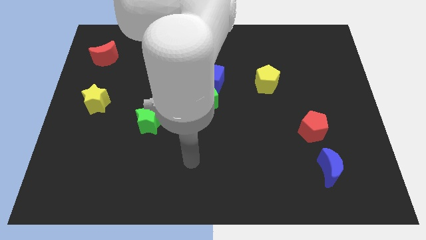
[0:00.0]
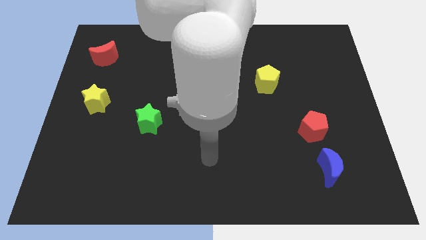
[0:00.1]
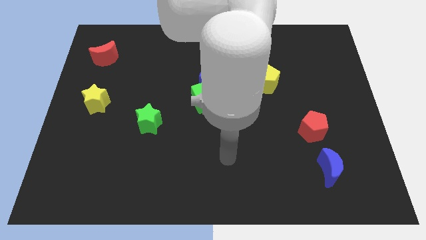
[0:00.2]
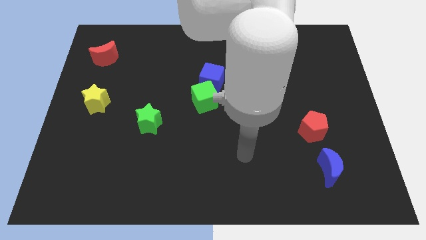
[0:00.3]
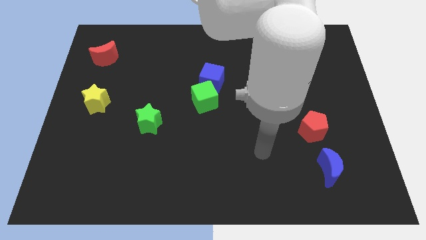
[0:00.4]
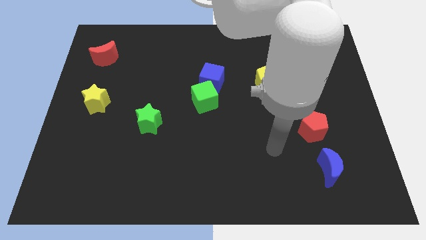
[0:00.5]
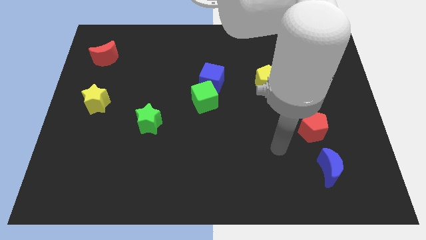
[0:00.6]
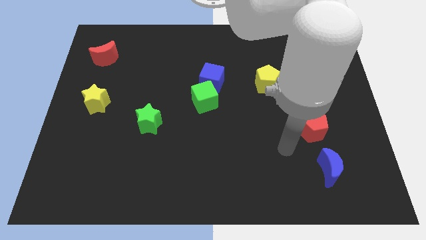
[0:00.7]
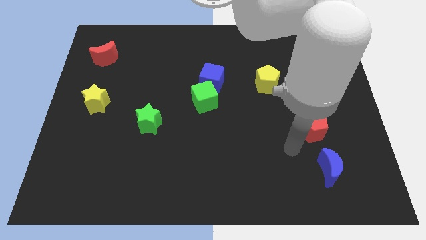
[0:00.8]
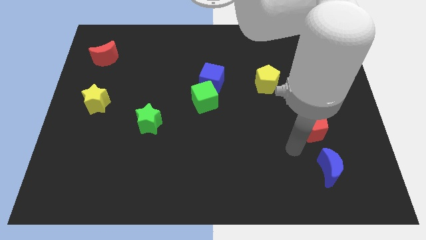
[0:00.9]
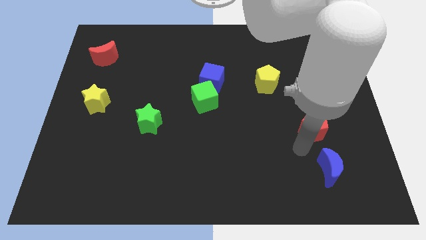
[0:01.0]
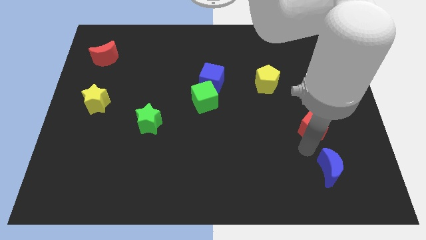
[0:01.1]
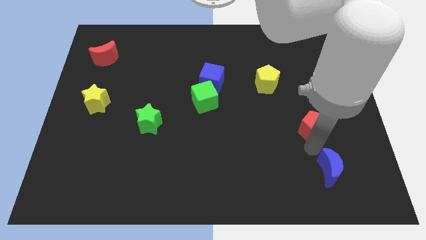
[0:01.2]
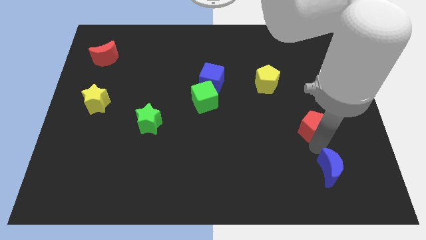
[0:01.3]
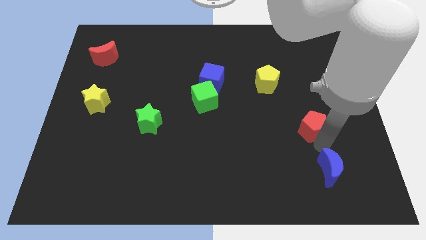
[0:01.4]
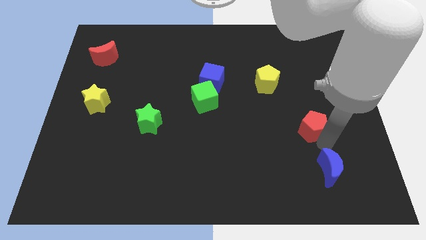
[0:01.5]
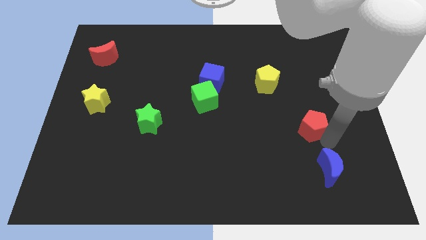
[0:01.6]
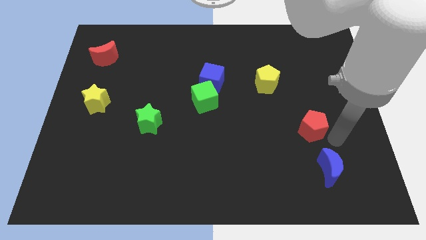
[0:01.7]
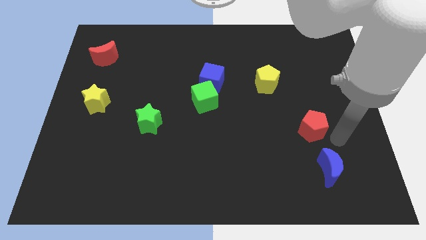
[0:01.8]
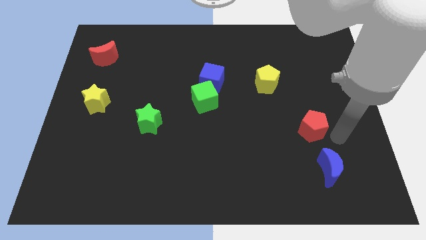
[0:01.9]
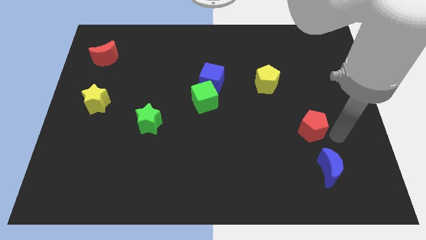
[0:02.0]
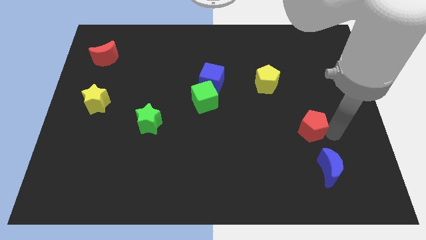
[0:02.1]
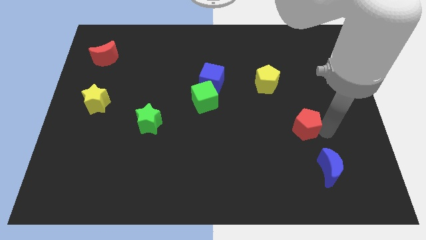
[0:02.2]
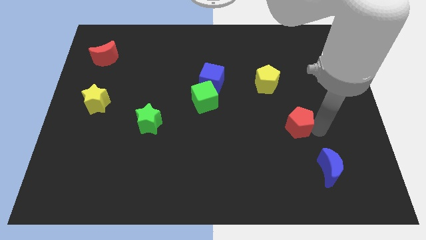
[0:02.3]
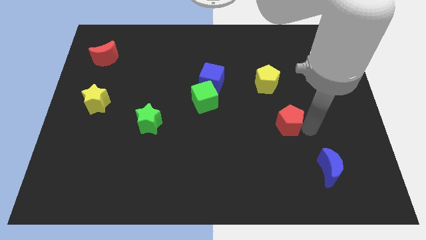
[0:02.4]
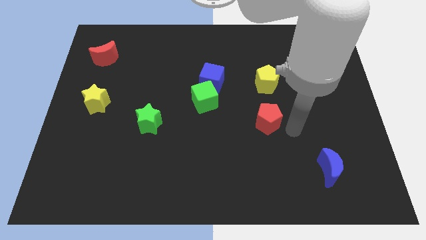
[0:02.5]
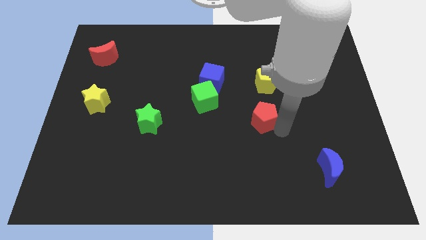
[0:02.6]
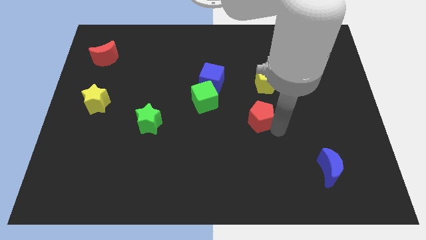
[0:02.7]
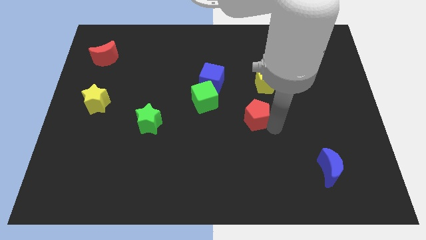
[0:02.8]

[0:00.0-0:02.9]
place the red pentagon below the yellow pentagon

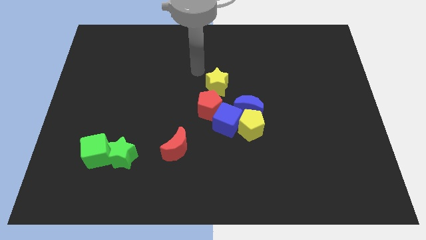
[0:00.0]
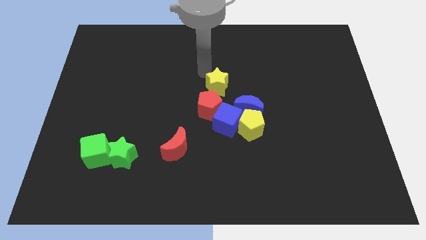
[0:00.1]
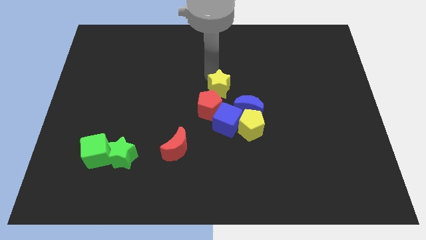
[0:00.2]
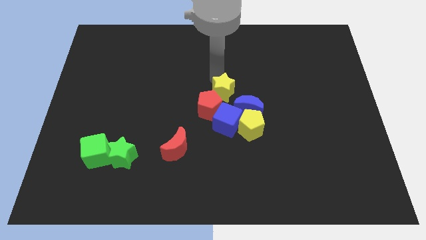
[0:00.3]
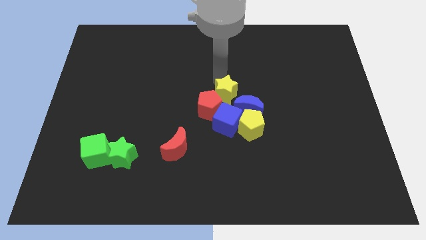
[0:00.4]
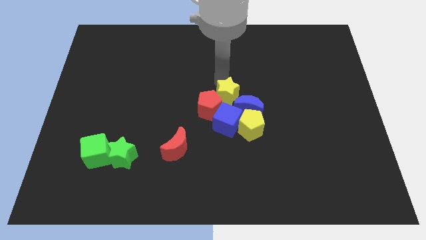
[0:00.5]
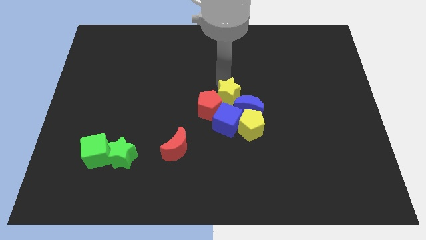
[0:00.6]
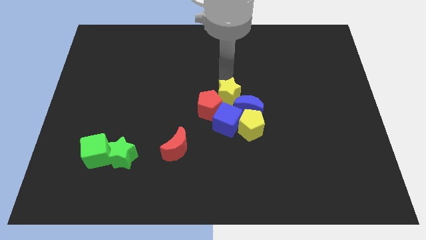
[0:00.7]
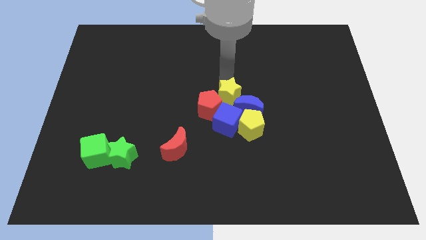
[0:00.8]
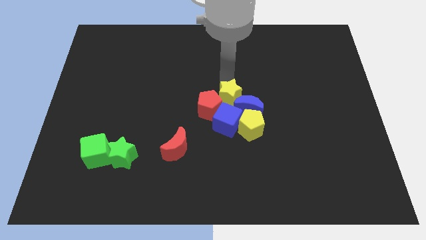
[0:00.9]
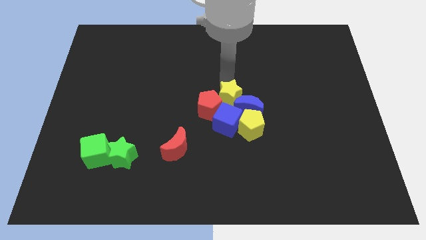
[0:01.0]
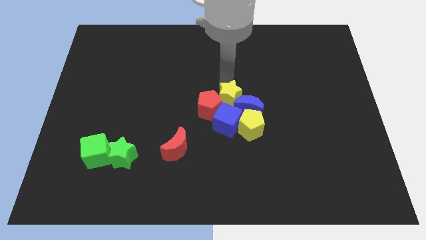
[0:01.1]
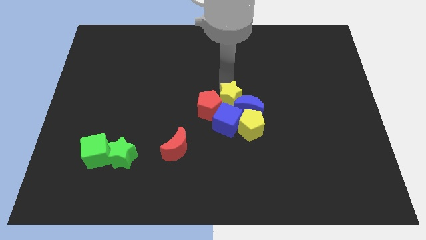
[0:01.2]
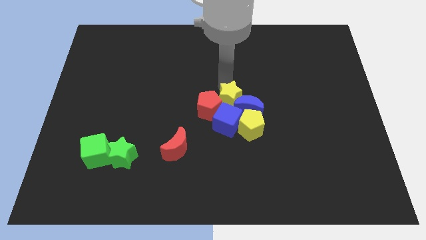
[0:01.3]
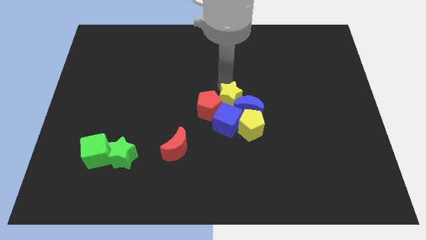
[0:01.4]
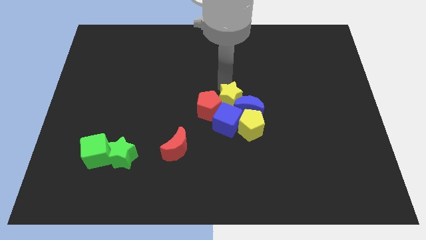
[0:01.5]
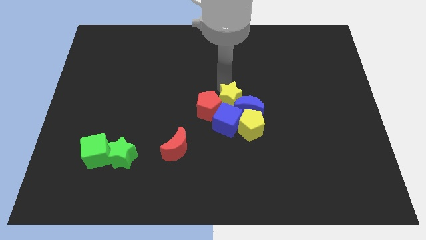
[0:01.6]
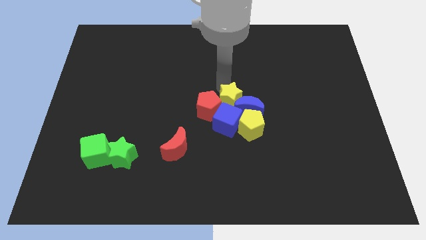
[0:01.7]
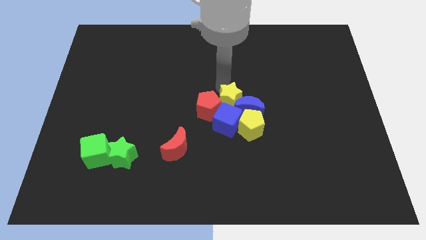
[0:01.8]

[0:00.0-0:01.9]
push the yellow star close to the group of objects

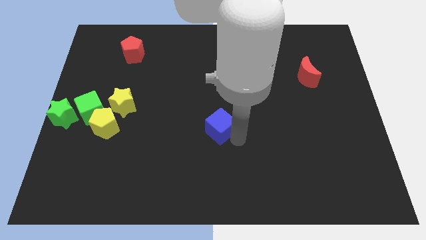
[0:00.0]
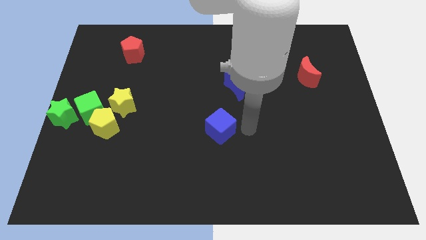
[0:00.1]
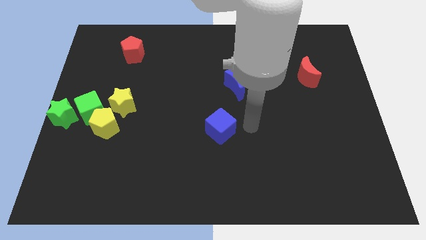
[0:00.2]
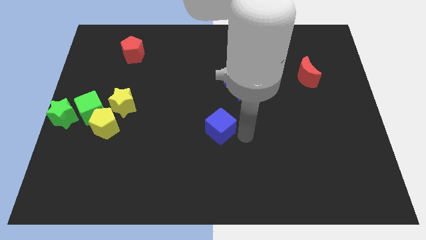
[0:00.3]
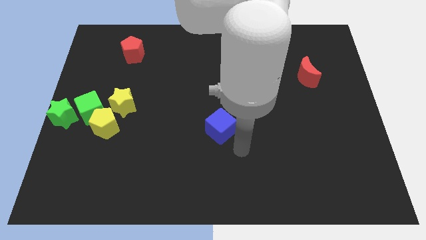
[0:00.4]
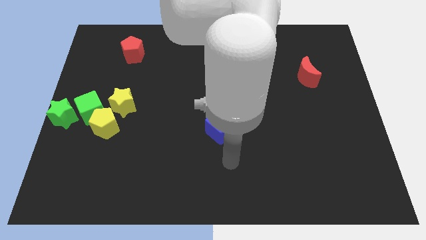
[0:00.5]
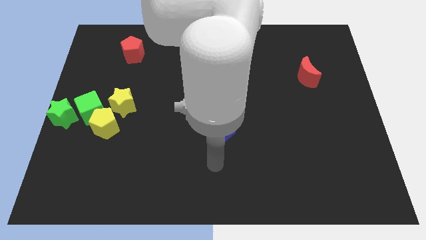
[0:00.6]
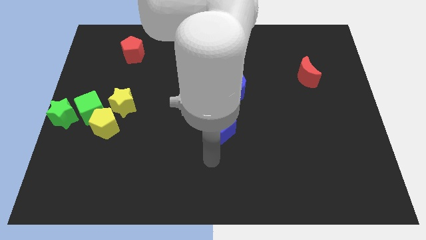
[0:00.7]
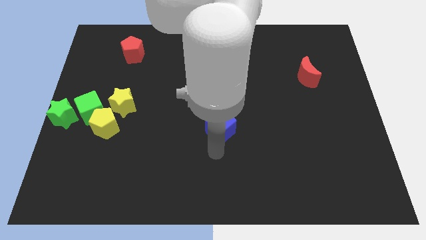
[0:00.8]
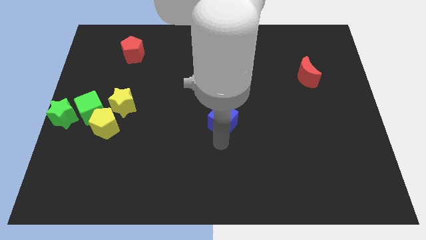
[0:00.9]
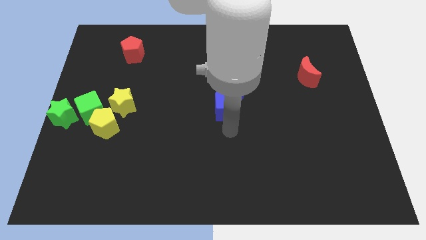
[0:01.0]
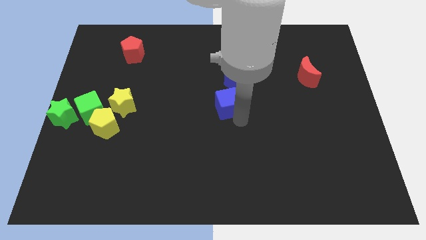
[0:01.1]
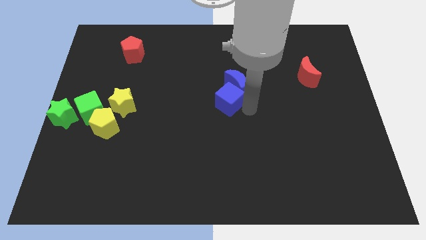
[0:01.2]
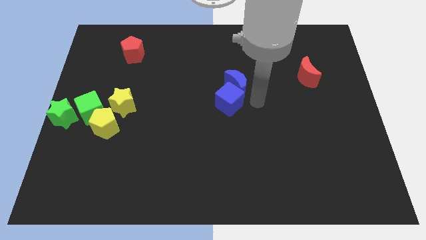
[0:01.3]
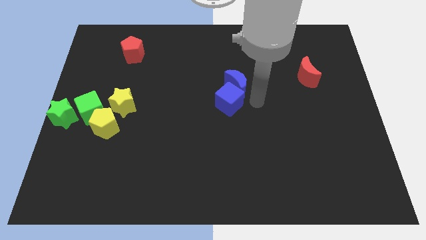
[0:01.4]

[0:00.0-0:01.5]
move the blue cube into the blue moon

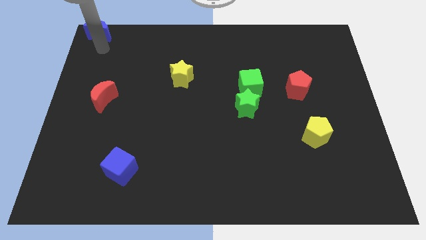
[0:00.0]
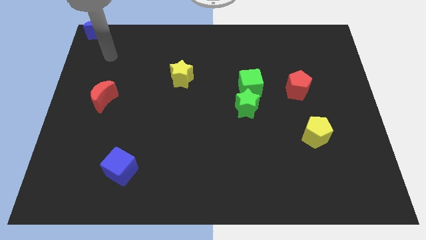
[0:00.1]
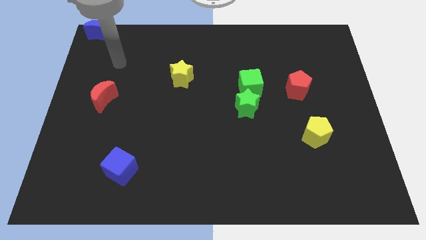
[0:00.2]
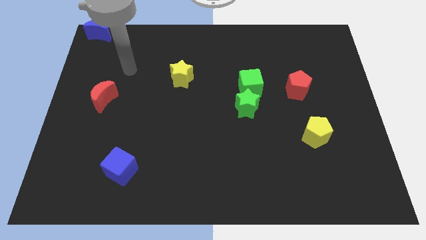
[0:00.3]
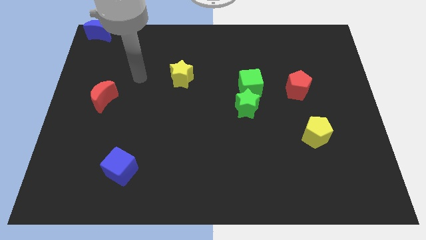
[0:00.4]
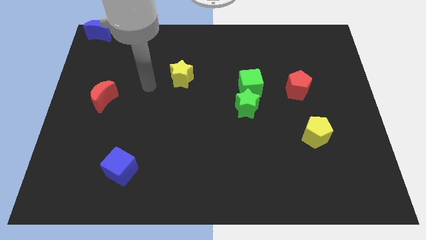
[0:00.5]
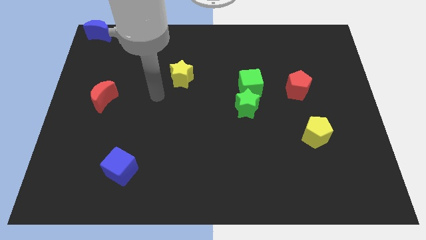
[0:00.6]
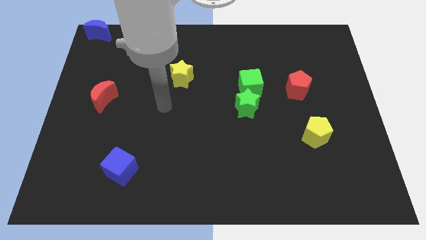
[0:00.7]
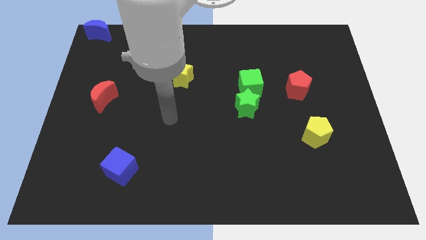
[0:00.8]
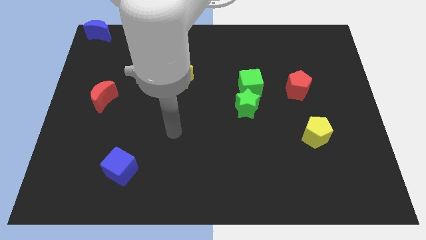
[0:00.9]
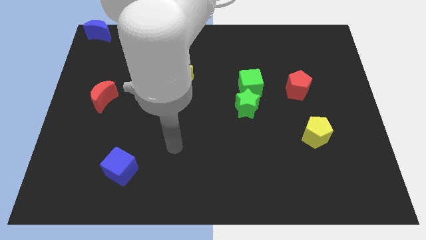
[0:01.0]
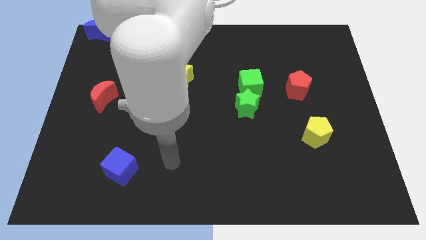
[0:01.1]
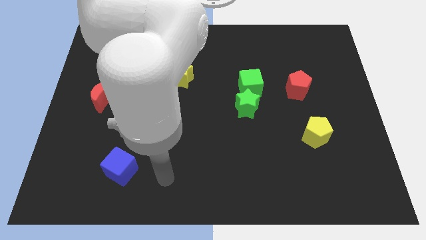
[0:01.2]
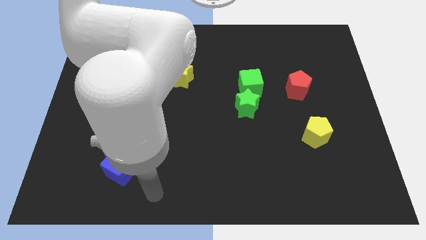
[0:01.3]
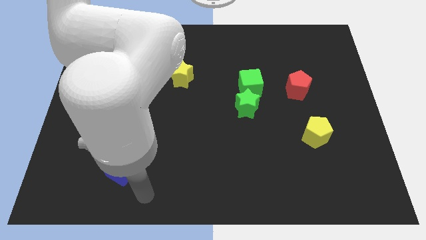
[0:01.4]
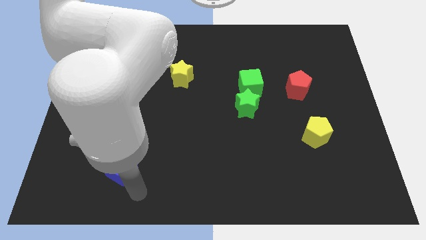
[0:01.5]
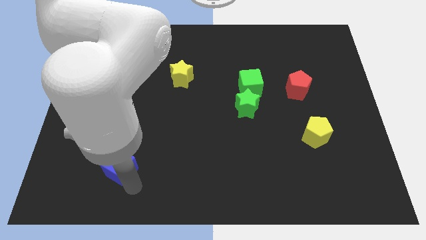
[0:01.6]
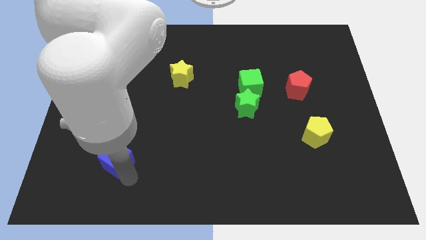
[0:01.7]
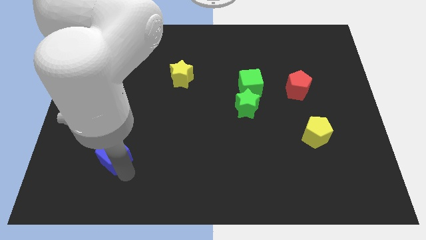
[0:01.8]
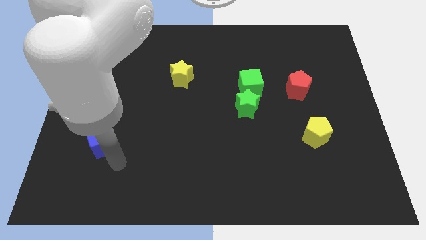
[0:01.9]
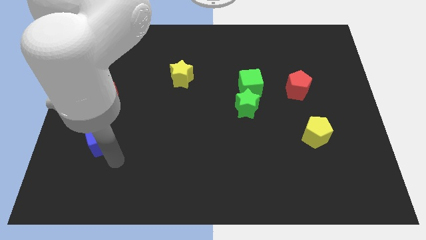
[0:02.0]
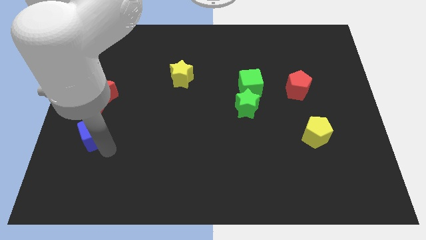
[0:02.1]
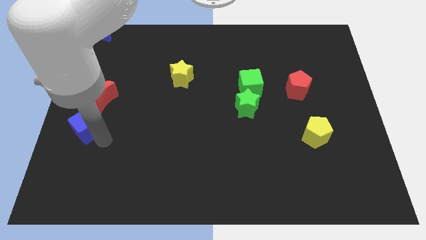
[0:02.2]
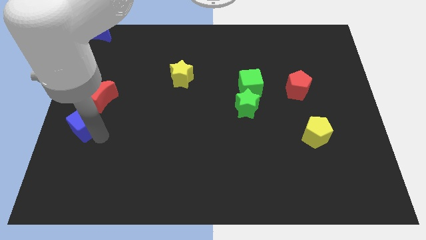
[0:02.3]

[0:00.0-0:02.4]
place the blue cube to the bottom left of the red moon
